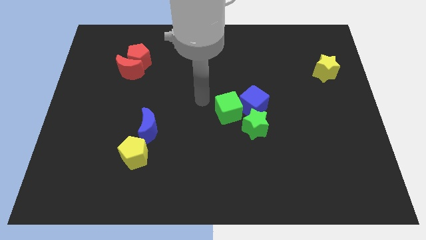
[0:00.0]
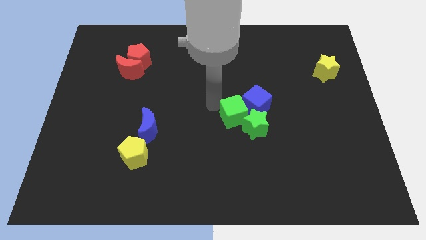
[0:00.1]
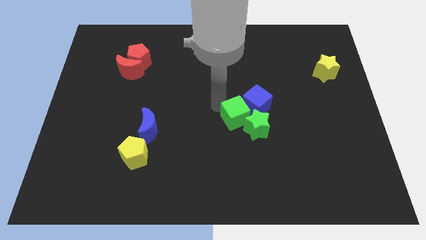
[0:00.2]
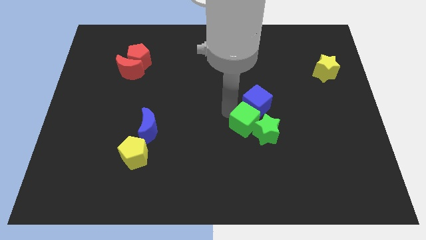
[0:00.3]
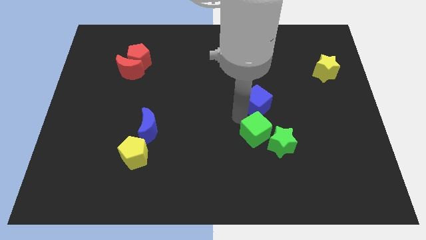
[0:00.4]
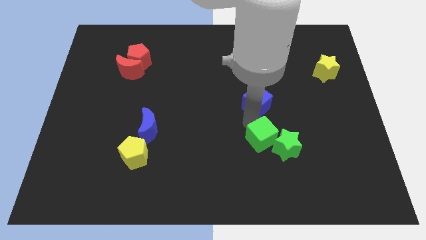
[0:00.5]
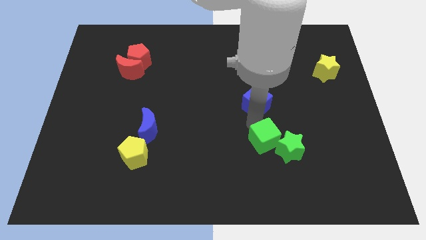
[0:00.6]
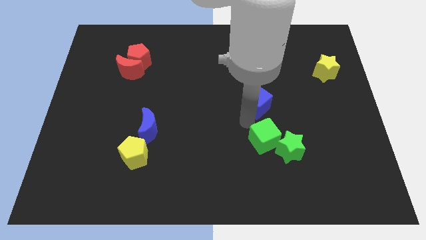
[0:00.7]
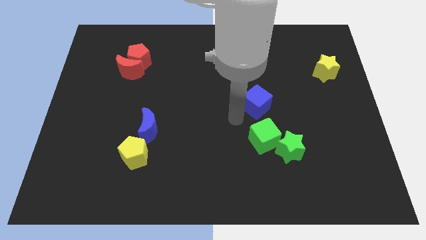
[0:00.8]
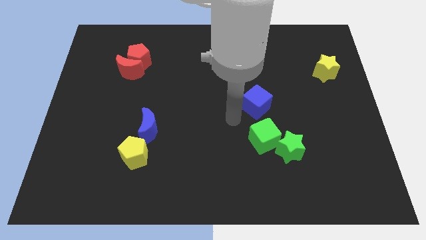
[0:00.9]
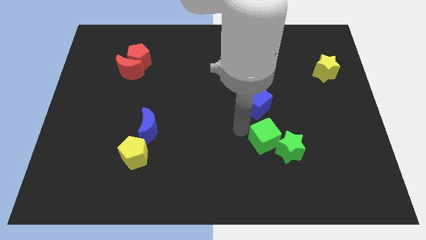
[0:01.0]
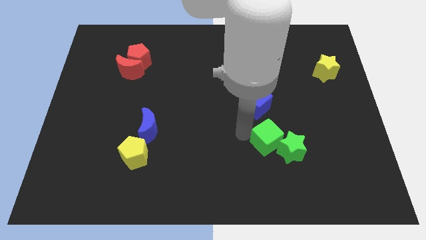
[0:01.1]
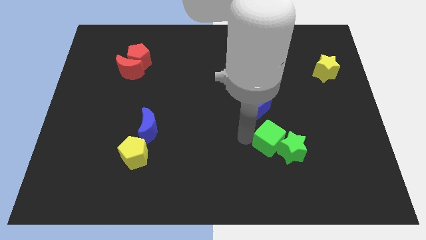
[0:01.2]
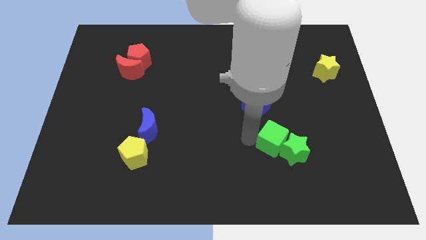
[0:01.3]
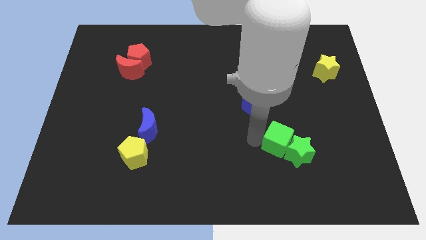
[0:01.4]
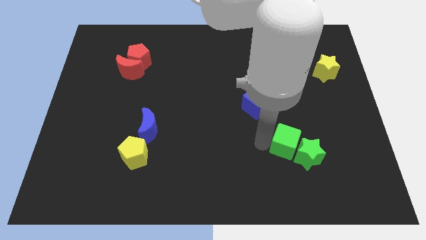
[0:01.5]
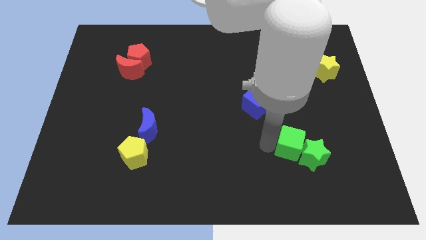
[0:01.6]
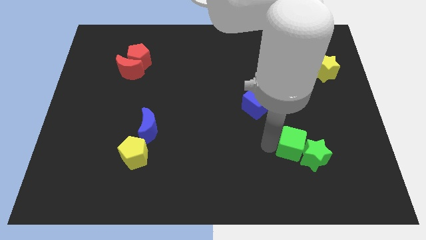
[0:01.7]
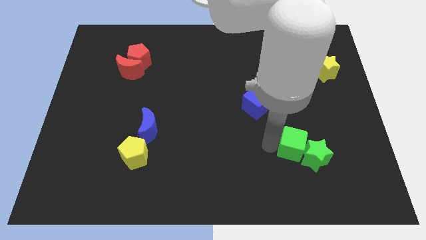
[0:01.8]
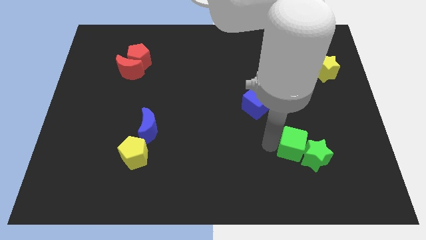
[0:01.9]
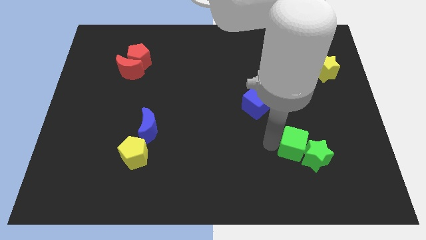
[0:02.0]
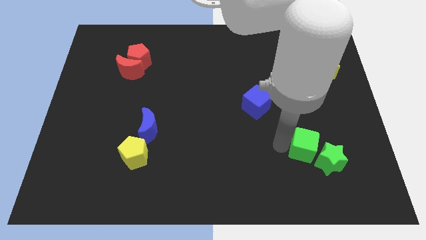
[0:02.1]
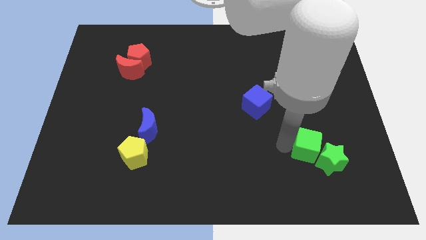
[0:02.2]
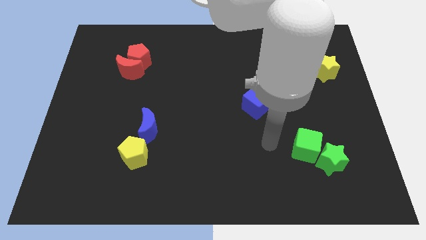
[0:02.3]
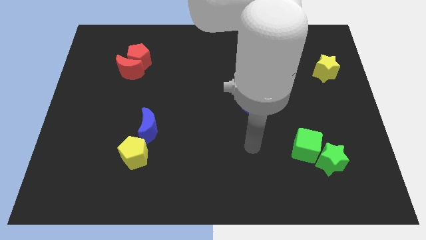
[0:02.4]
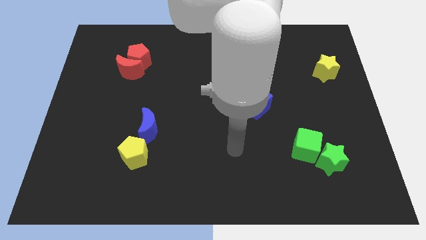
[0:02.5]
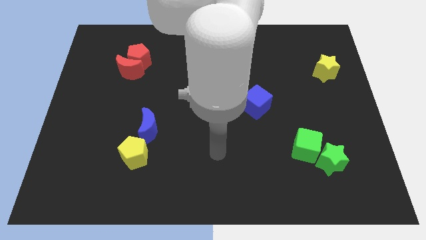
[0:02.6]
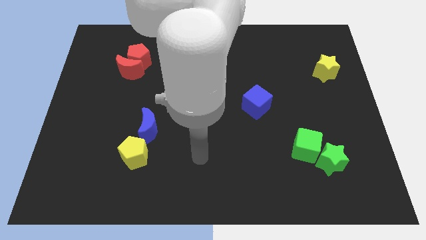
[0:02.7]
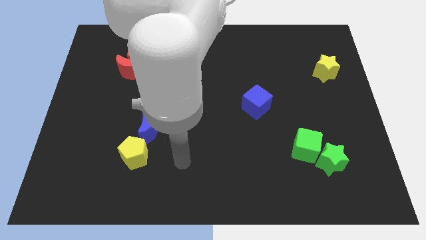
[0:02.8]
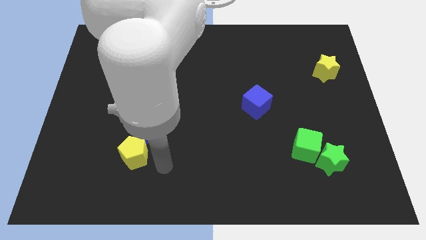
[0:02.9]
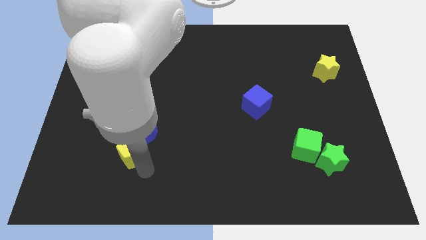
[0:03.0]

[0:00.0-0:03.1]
move green star and green cube towards the bottom right

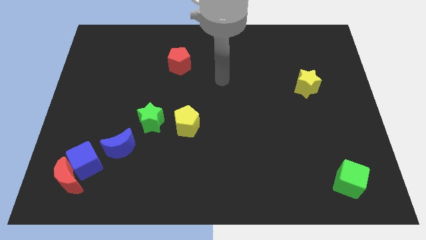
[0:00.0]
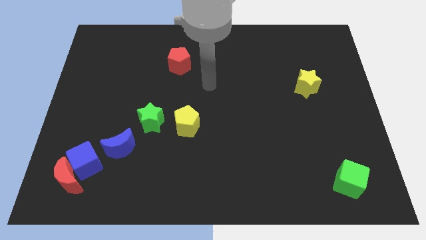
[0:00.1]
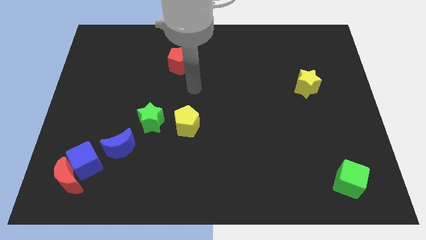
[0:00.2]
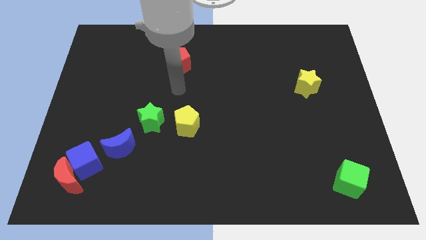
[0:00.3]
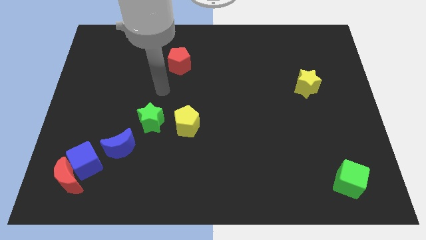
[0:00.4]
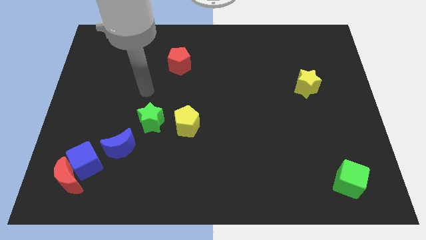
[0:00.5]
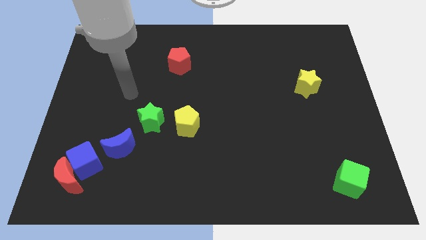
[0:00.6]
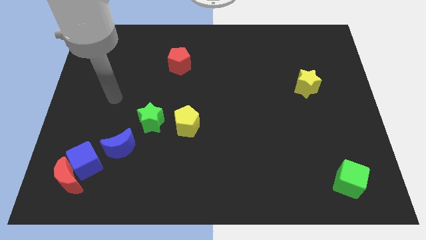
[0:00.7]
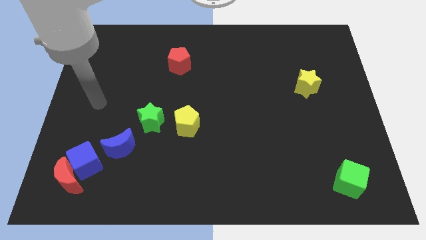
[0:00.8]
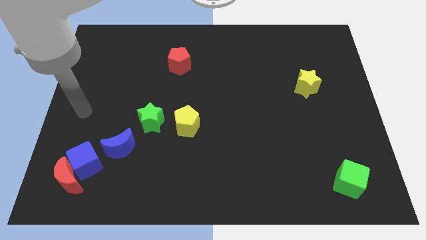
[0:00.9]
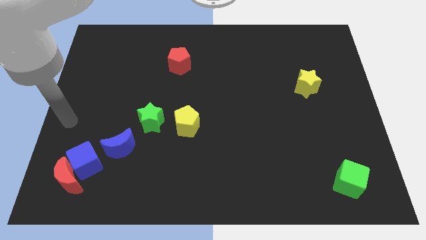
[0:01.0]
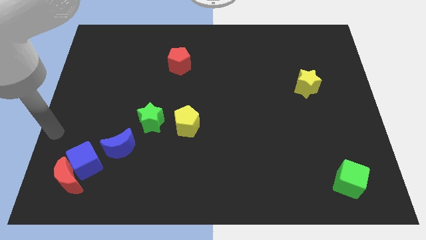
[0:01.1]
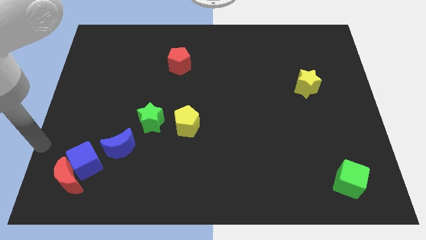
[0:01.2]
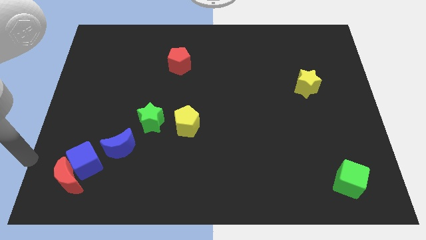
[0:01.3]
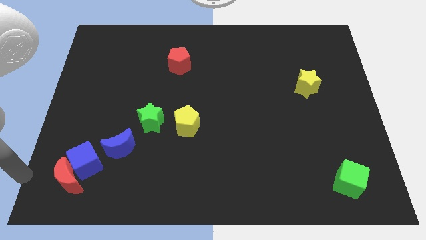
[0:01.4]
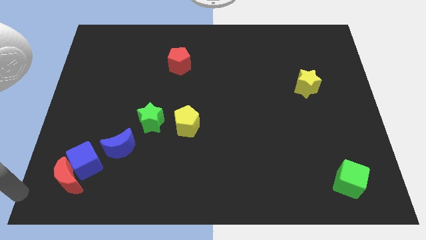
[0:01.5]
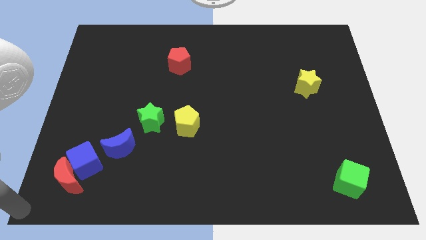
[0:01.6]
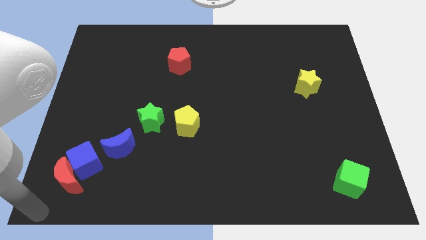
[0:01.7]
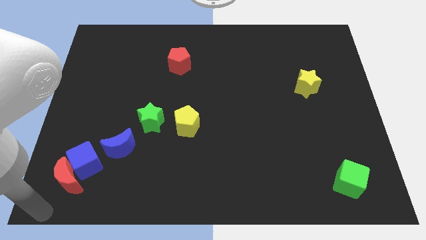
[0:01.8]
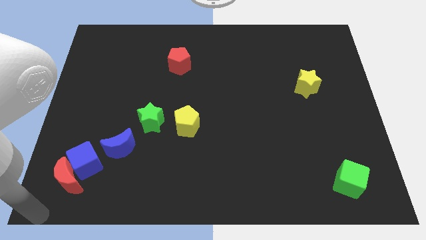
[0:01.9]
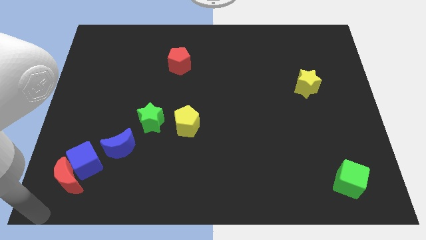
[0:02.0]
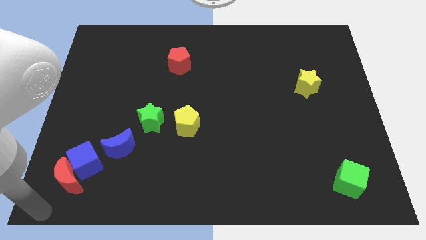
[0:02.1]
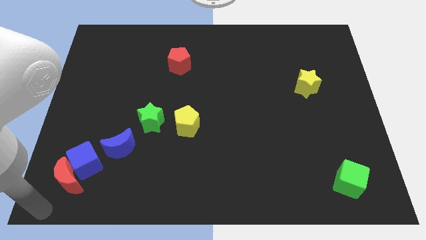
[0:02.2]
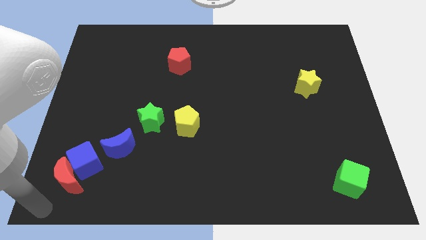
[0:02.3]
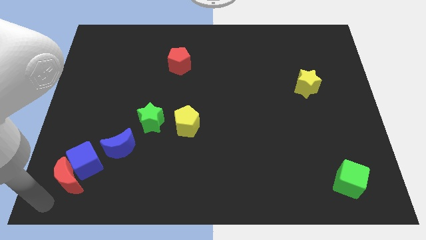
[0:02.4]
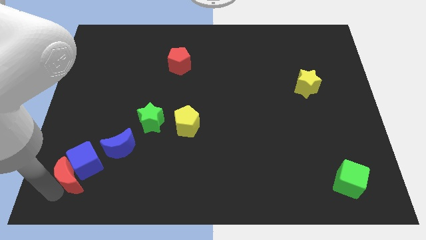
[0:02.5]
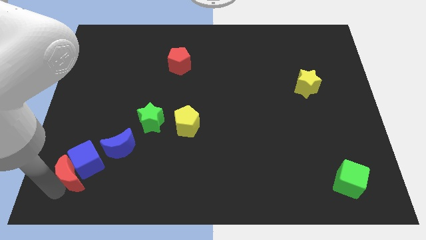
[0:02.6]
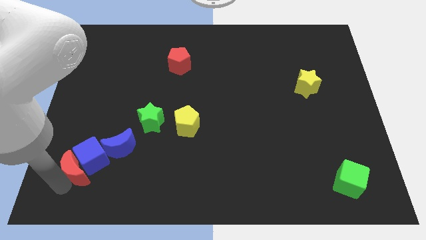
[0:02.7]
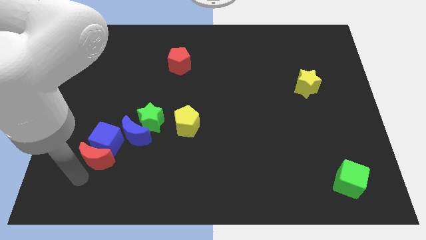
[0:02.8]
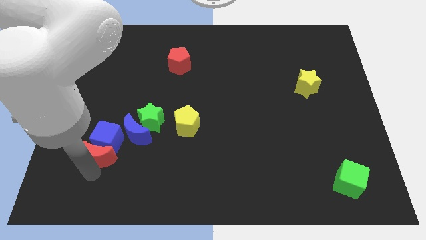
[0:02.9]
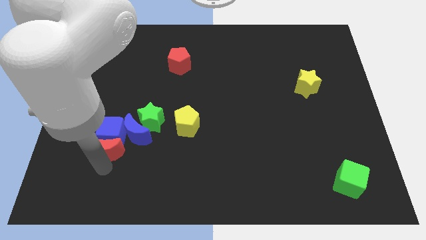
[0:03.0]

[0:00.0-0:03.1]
push the red moon into the blue cube

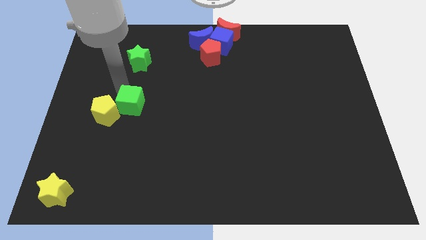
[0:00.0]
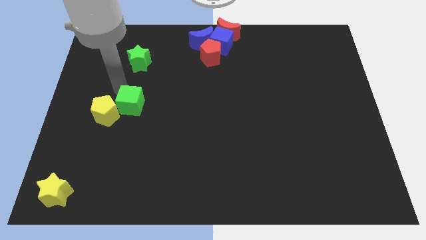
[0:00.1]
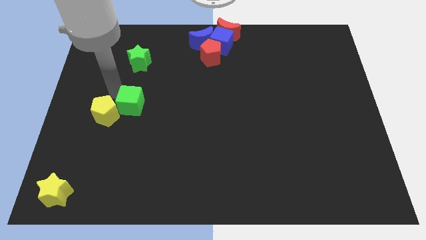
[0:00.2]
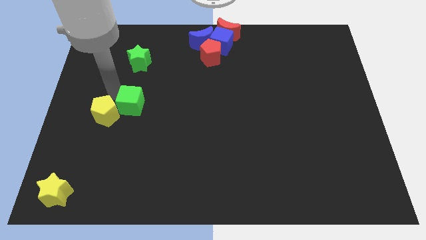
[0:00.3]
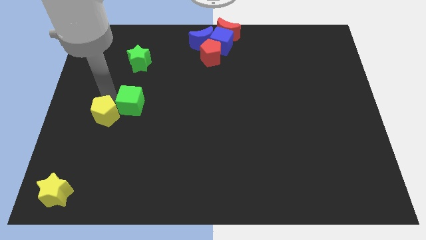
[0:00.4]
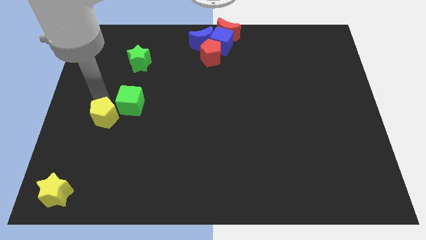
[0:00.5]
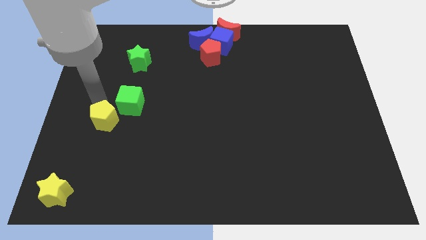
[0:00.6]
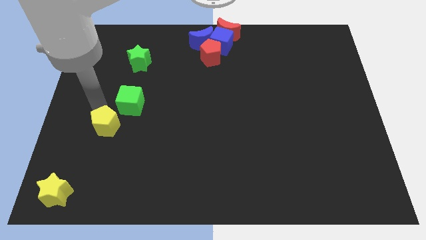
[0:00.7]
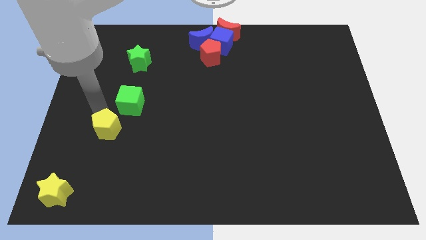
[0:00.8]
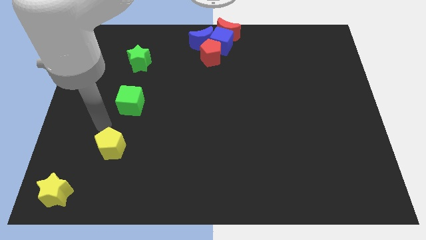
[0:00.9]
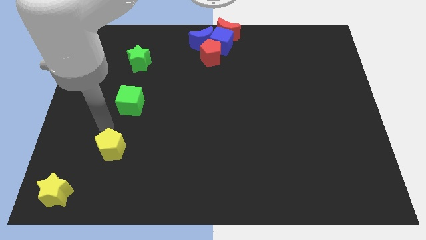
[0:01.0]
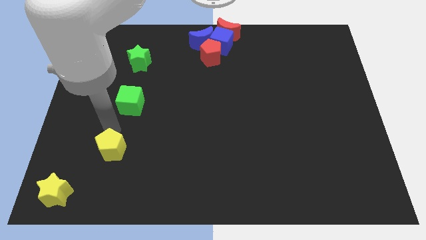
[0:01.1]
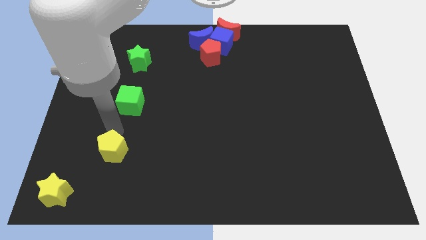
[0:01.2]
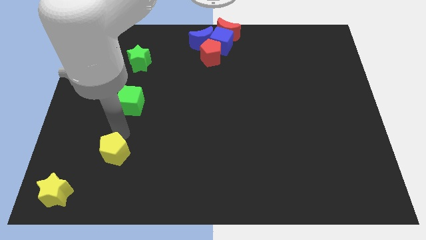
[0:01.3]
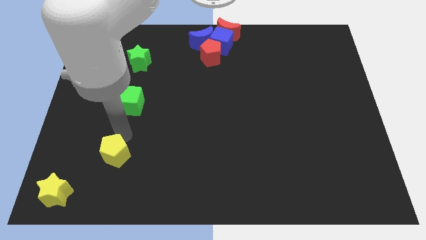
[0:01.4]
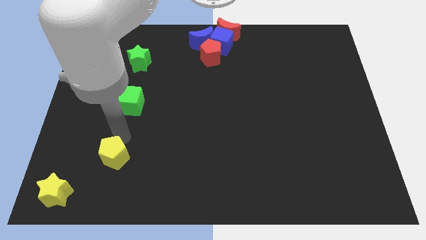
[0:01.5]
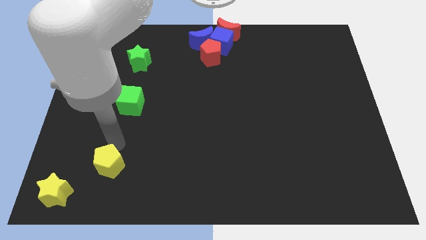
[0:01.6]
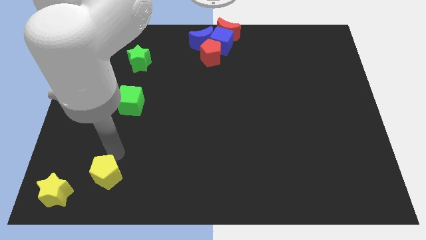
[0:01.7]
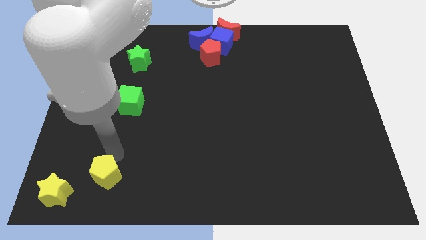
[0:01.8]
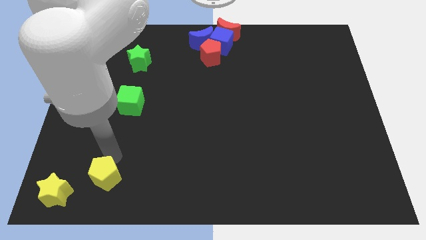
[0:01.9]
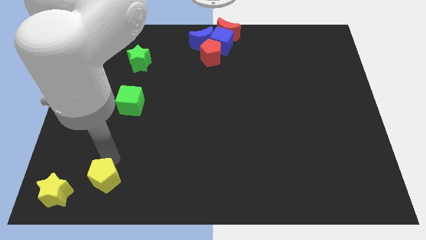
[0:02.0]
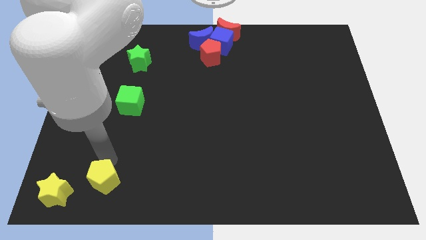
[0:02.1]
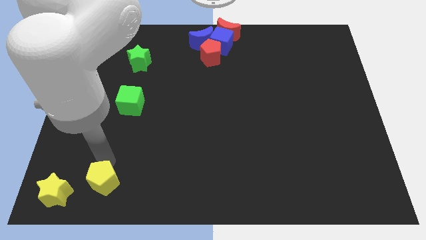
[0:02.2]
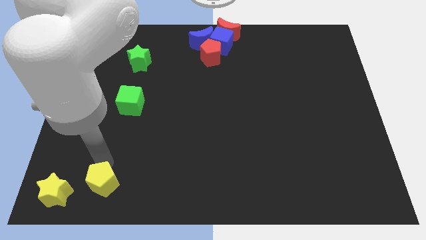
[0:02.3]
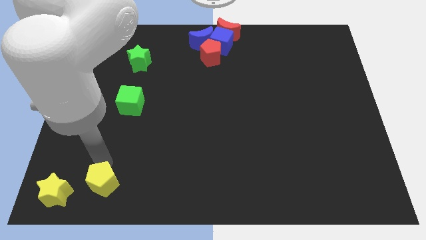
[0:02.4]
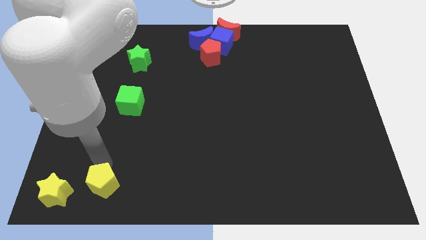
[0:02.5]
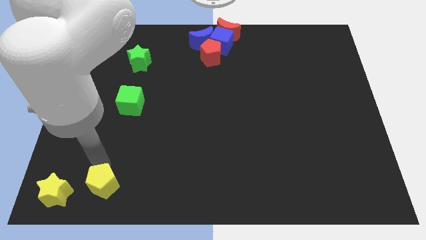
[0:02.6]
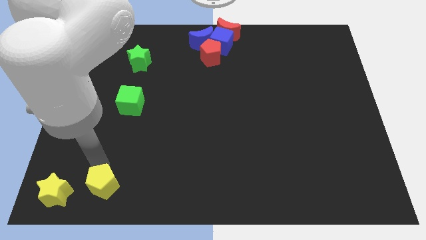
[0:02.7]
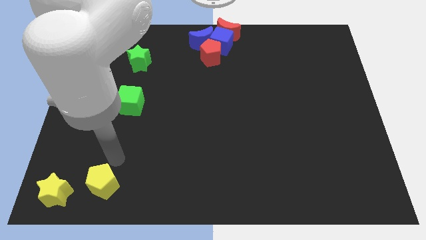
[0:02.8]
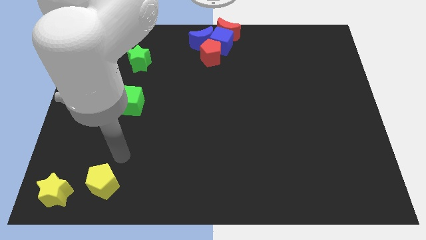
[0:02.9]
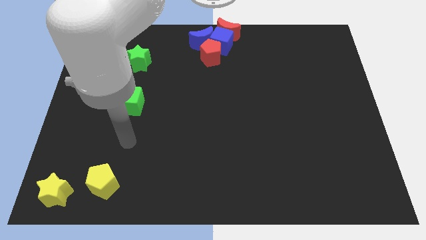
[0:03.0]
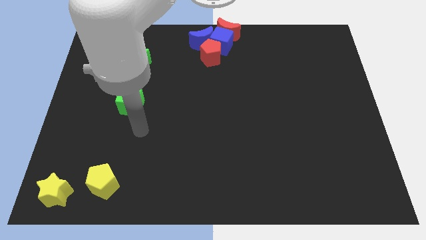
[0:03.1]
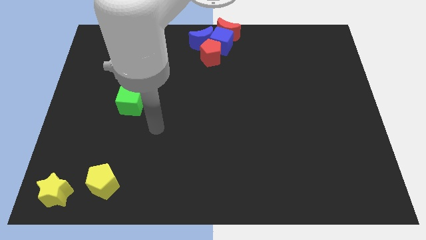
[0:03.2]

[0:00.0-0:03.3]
bring the yellow pentagon at the right side of the yellow star
